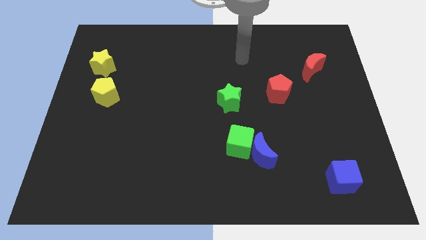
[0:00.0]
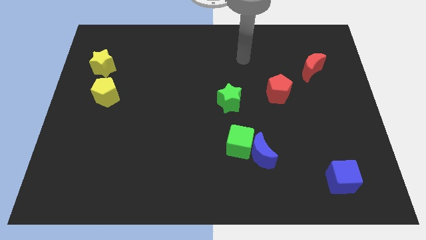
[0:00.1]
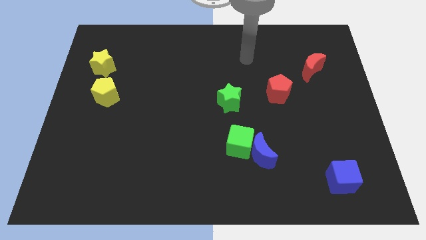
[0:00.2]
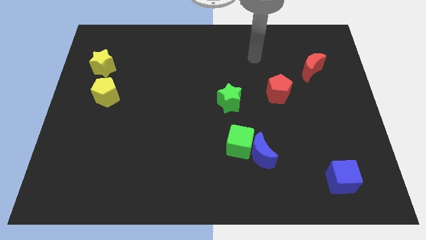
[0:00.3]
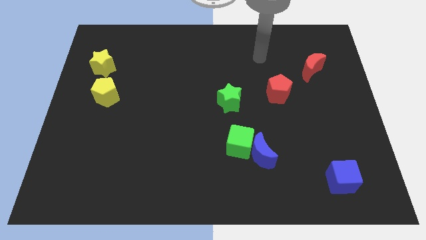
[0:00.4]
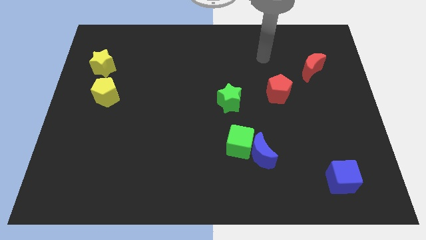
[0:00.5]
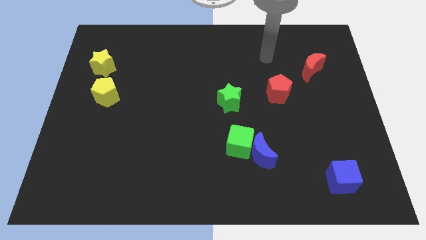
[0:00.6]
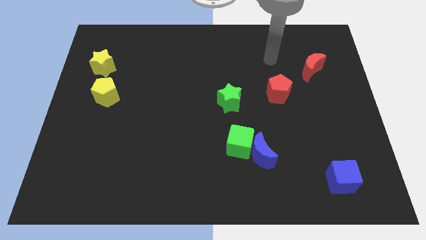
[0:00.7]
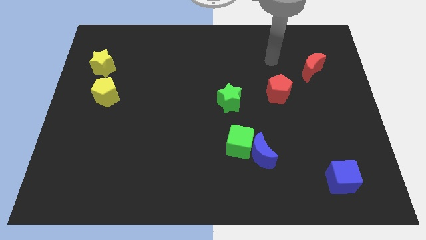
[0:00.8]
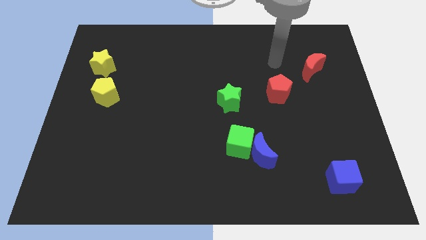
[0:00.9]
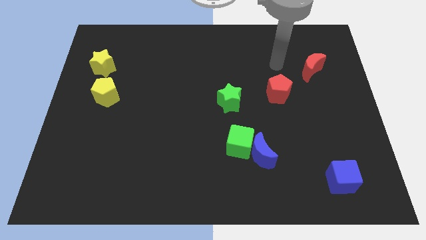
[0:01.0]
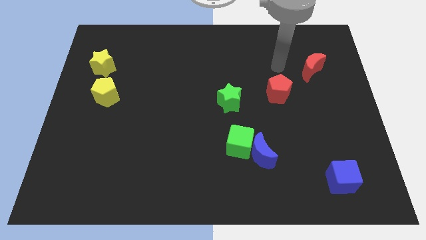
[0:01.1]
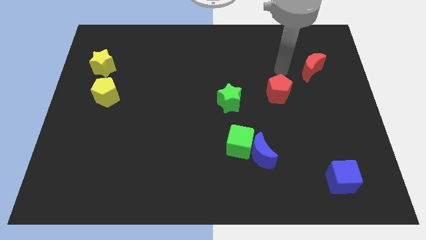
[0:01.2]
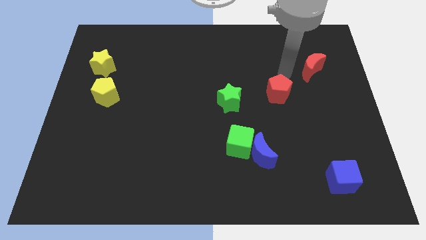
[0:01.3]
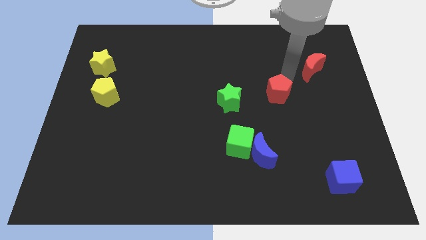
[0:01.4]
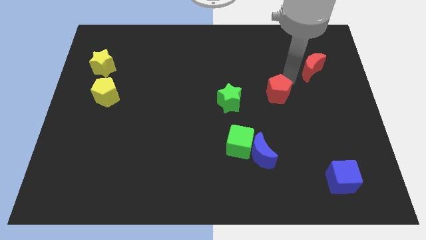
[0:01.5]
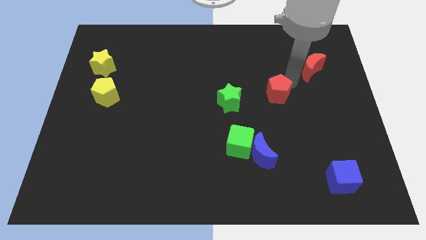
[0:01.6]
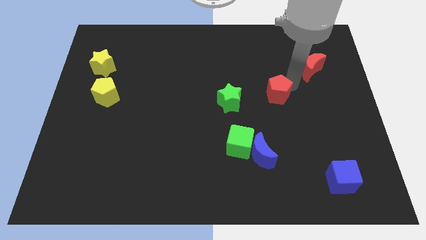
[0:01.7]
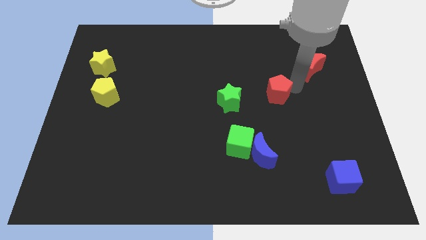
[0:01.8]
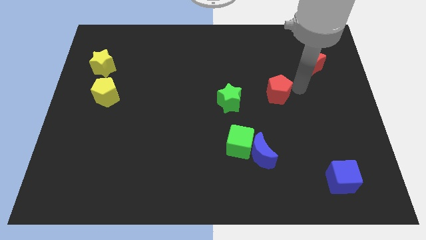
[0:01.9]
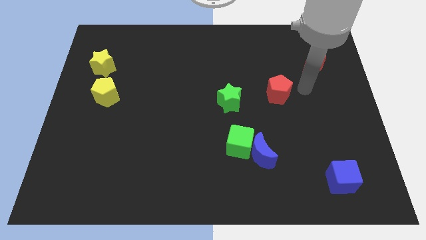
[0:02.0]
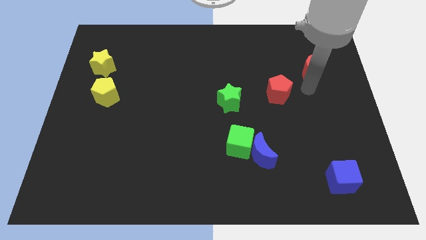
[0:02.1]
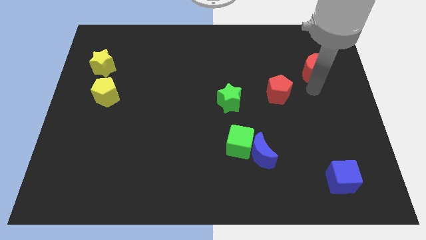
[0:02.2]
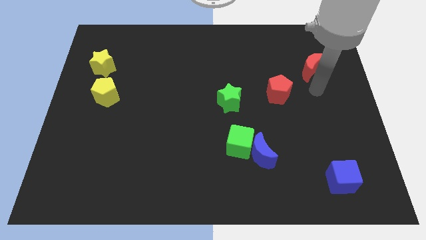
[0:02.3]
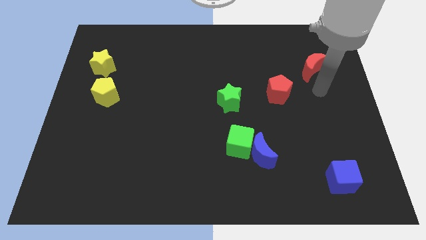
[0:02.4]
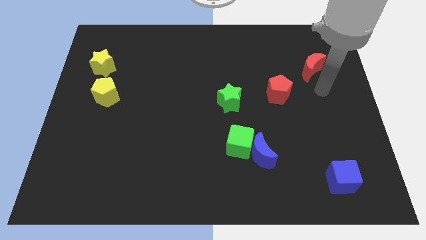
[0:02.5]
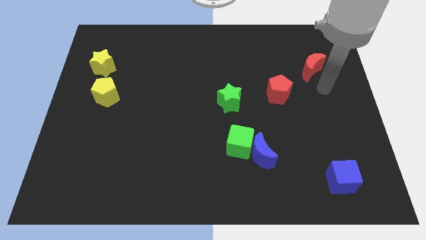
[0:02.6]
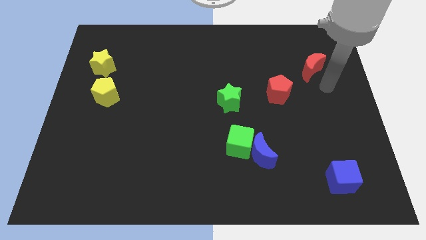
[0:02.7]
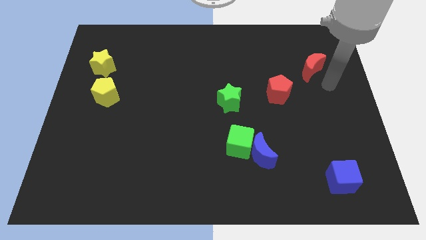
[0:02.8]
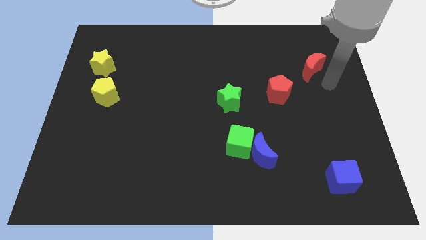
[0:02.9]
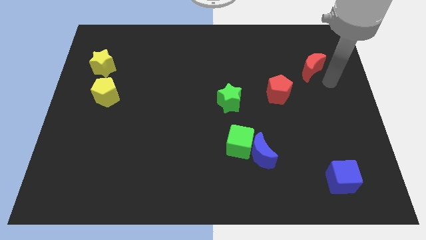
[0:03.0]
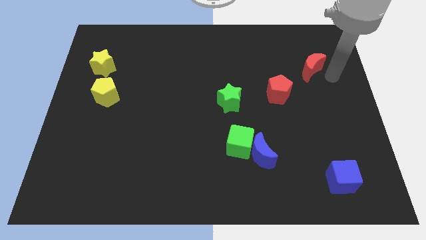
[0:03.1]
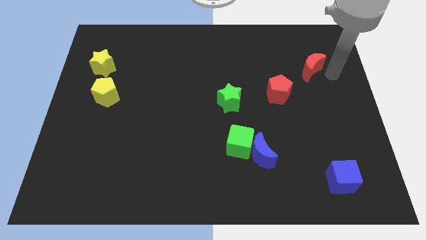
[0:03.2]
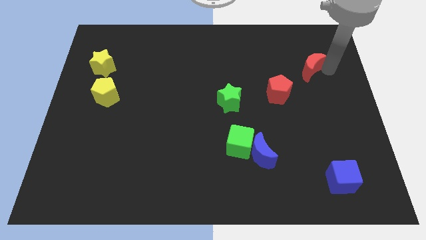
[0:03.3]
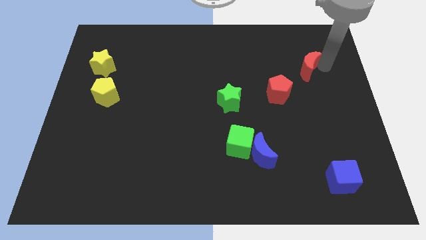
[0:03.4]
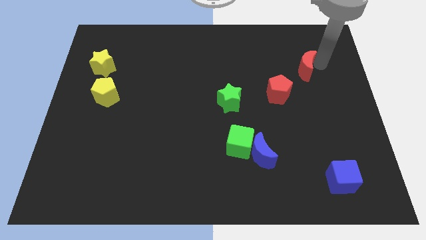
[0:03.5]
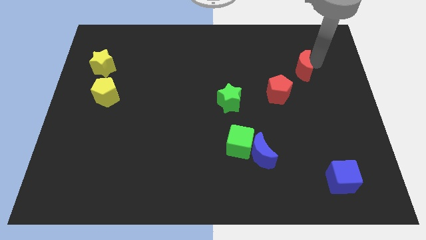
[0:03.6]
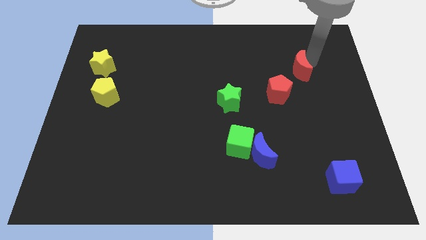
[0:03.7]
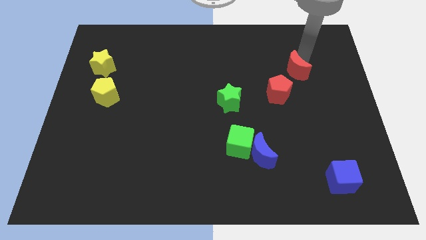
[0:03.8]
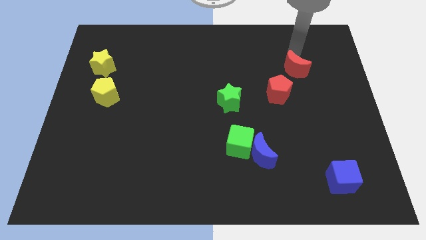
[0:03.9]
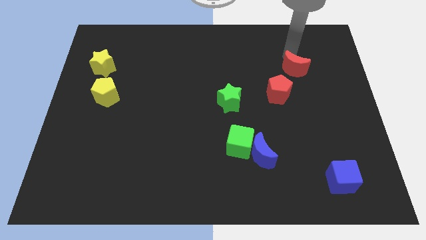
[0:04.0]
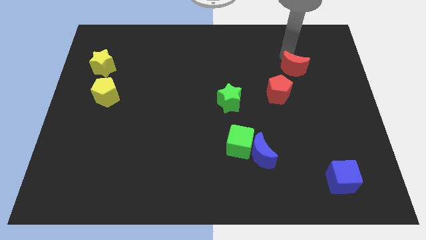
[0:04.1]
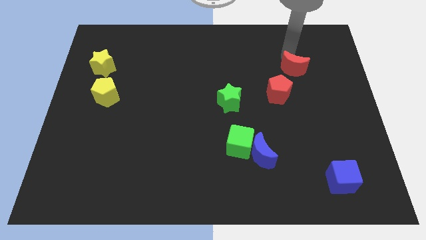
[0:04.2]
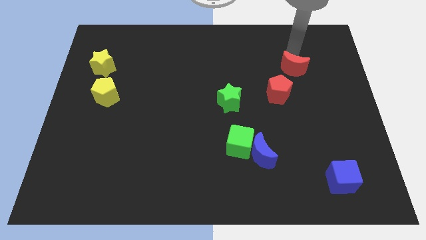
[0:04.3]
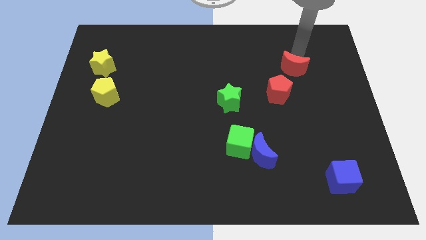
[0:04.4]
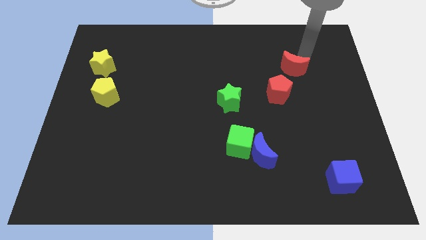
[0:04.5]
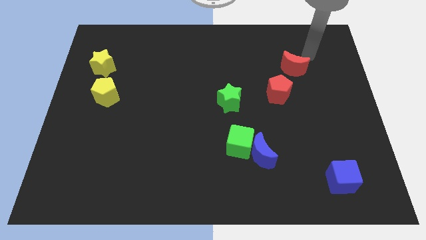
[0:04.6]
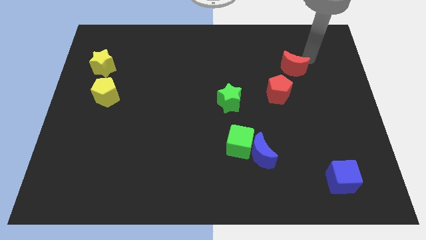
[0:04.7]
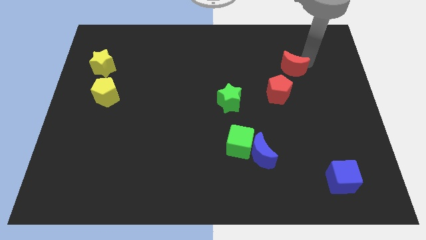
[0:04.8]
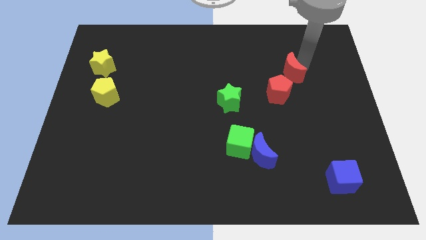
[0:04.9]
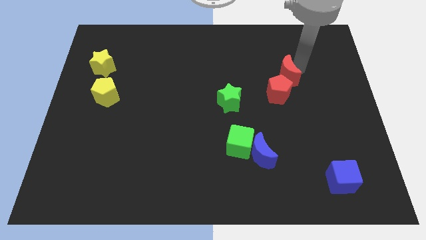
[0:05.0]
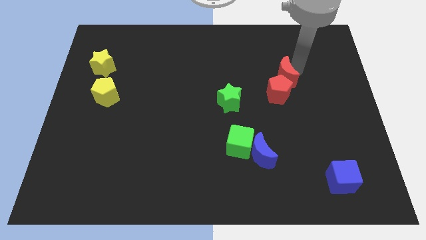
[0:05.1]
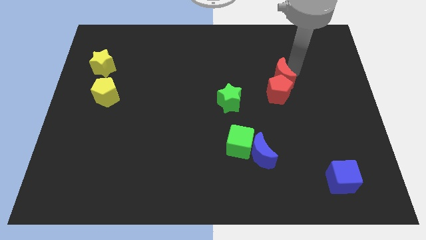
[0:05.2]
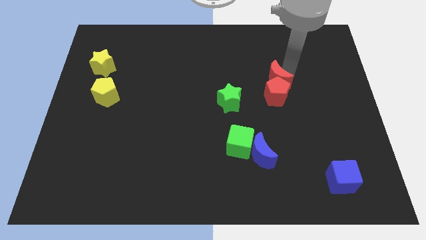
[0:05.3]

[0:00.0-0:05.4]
push the red crescent to the top of the red pentagon

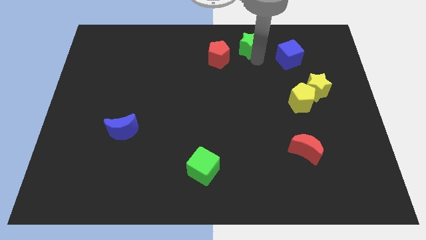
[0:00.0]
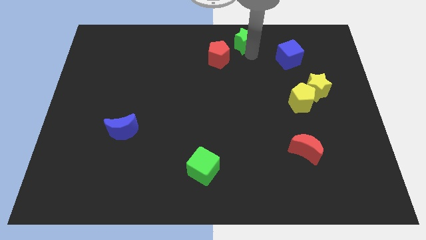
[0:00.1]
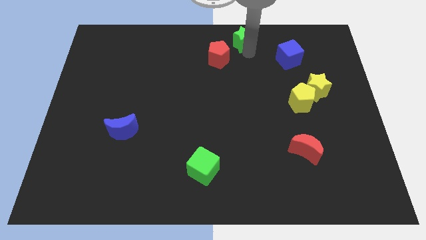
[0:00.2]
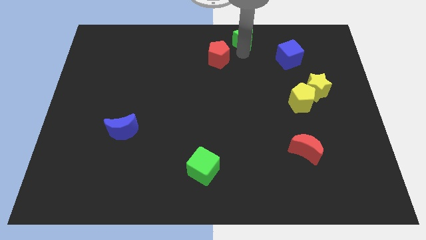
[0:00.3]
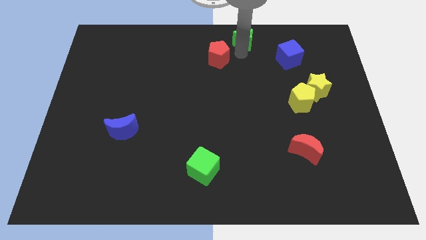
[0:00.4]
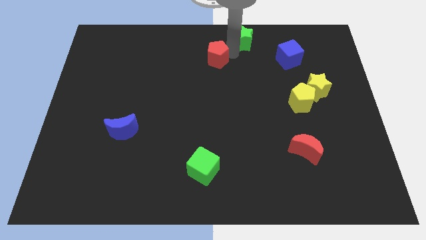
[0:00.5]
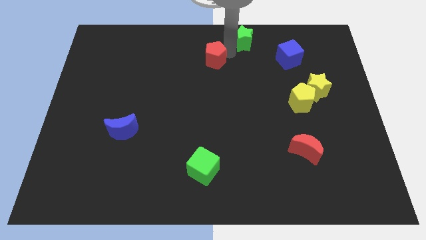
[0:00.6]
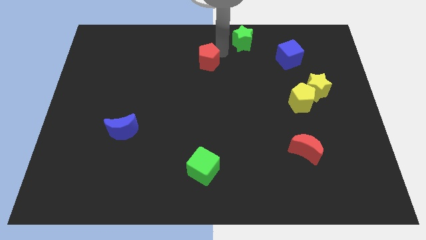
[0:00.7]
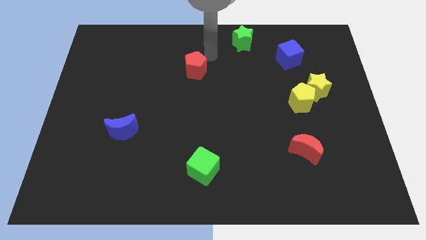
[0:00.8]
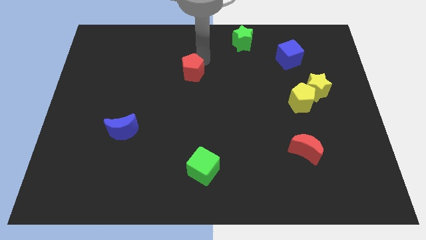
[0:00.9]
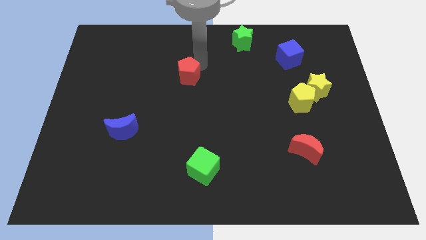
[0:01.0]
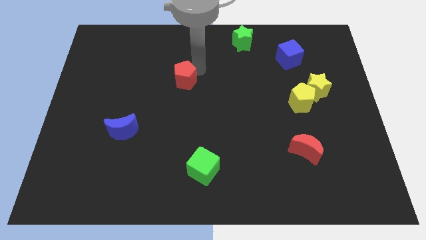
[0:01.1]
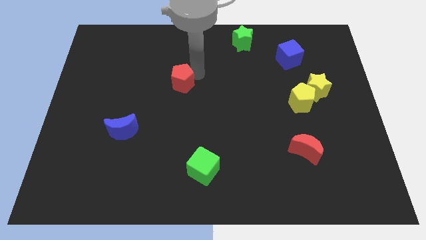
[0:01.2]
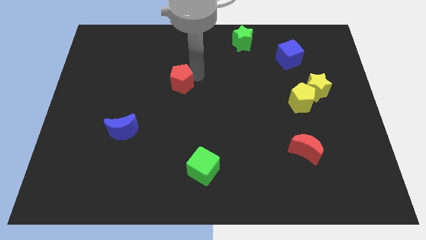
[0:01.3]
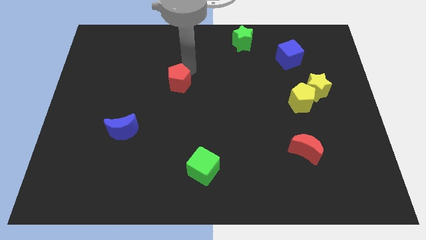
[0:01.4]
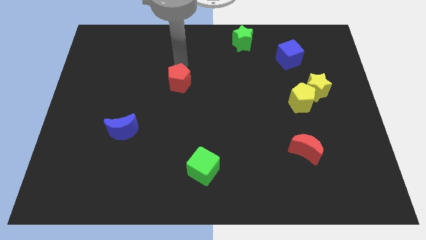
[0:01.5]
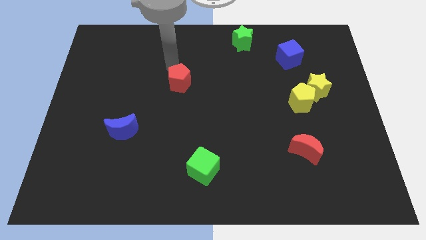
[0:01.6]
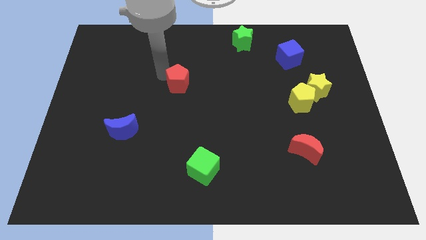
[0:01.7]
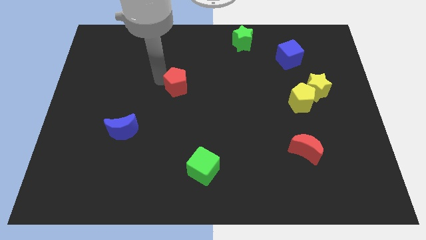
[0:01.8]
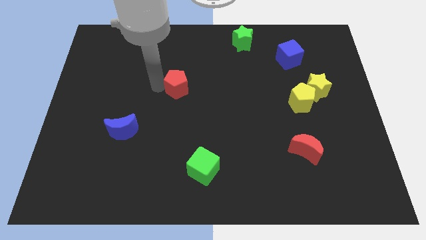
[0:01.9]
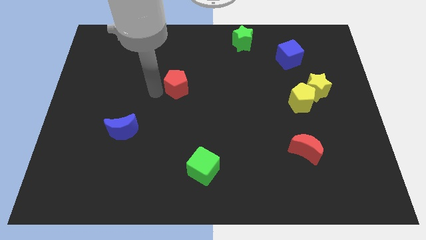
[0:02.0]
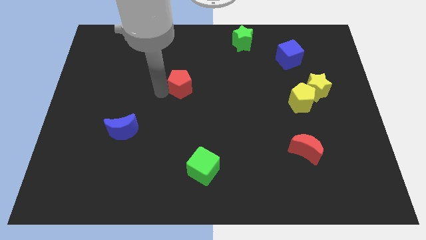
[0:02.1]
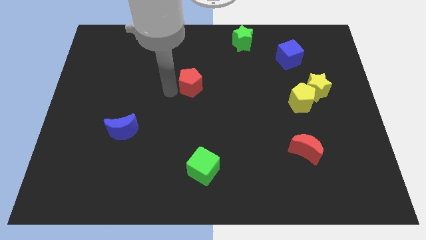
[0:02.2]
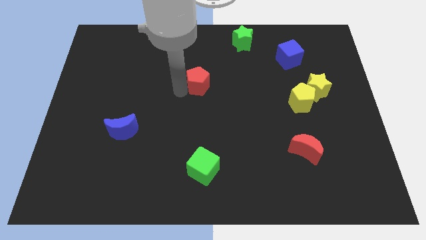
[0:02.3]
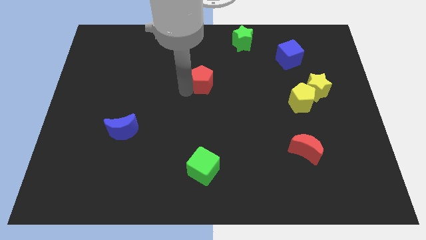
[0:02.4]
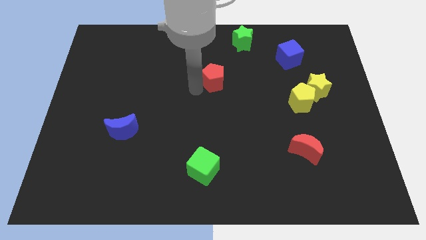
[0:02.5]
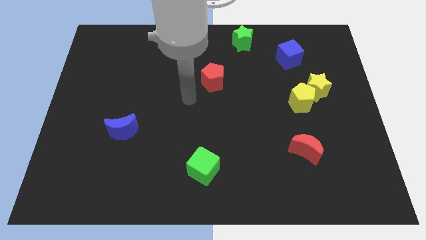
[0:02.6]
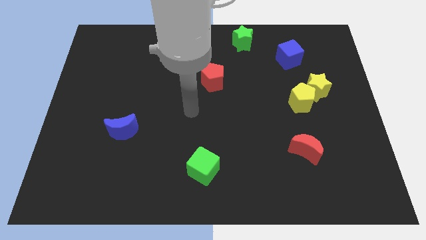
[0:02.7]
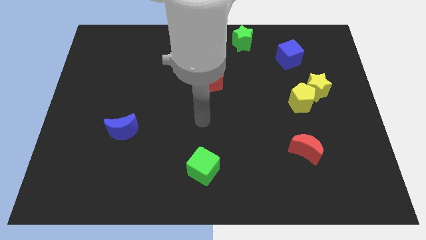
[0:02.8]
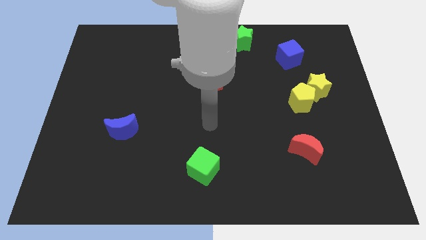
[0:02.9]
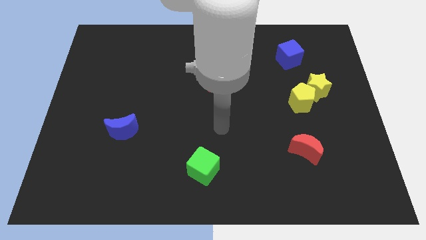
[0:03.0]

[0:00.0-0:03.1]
separate red pentagon from green star

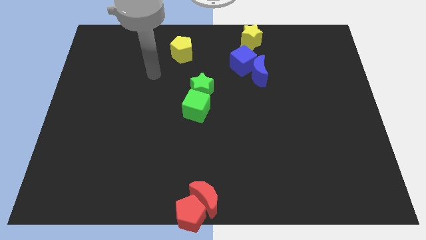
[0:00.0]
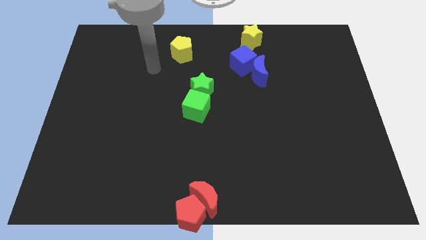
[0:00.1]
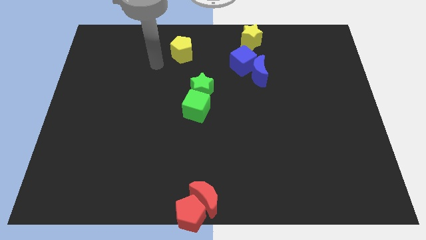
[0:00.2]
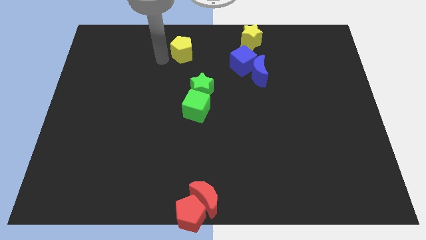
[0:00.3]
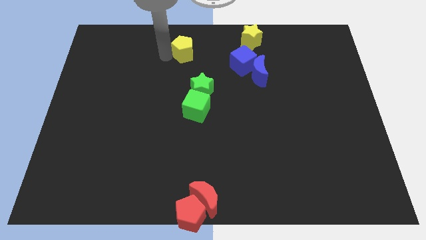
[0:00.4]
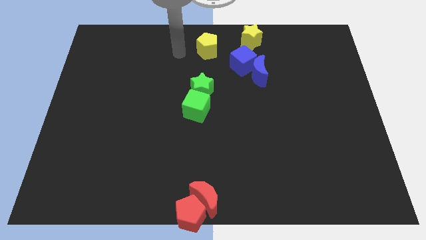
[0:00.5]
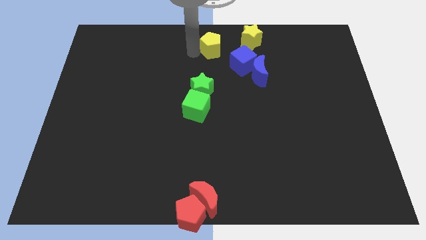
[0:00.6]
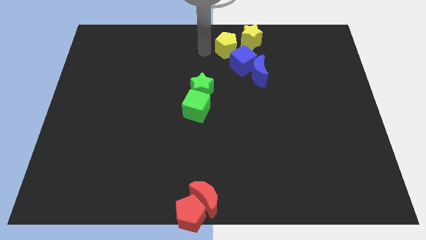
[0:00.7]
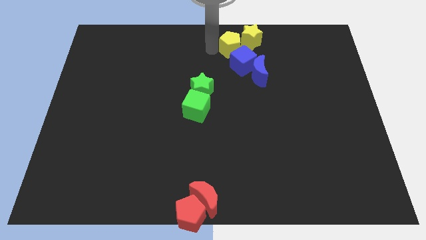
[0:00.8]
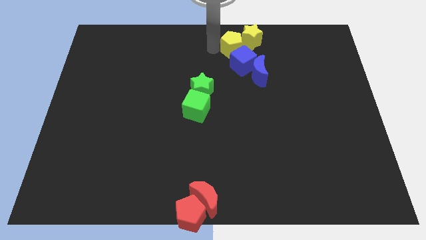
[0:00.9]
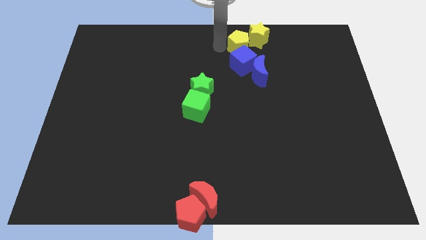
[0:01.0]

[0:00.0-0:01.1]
move yellow pentagon into yellow star
